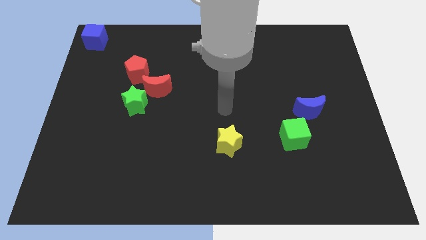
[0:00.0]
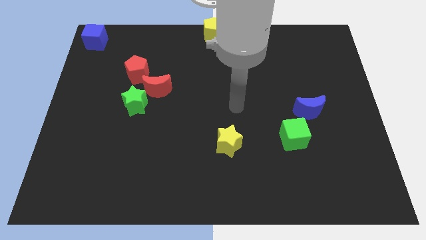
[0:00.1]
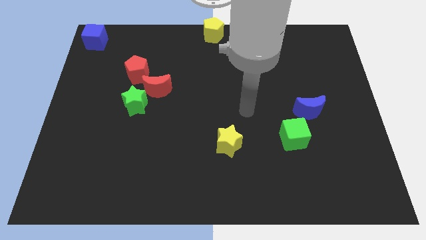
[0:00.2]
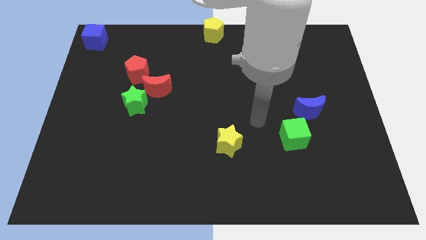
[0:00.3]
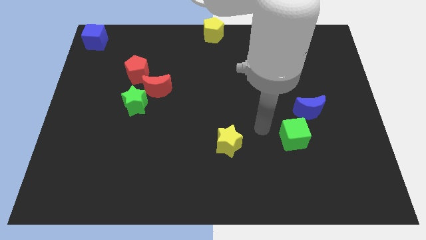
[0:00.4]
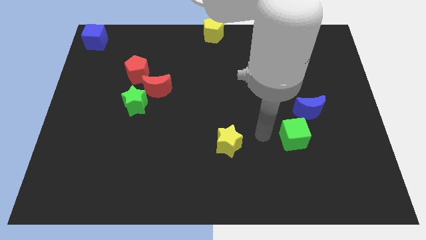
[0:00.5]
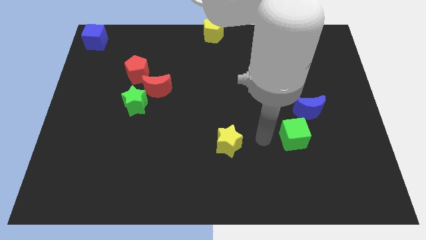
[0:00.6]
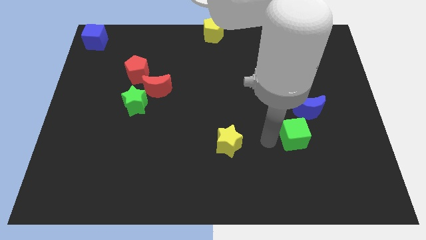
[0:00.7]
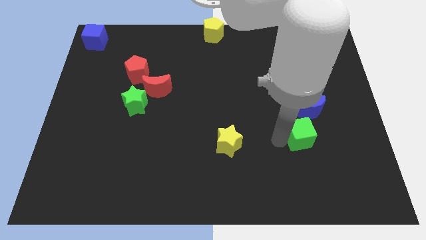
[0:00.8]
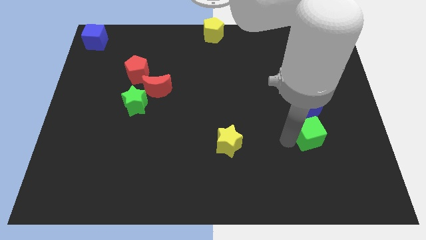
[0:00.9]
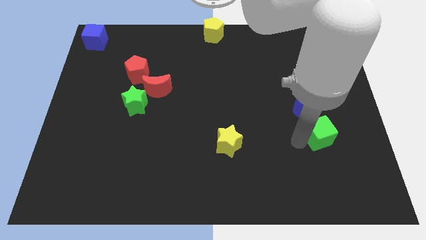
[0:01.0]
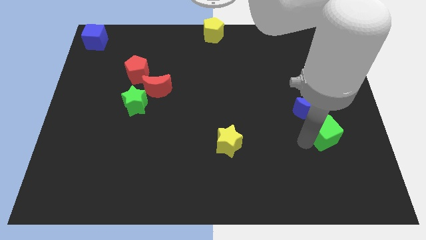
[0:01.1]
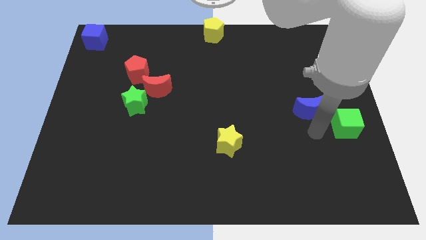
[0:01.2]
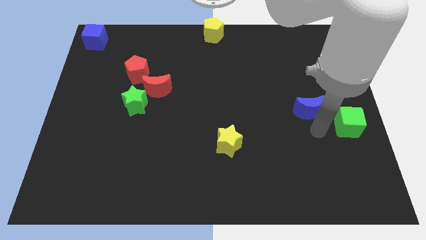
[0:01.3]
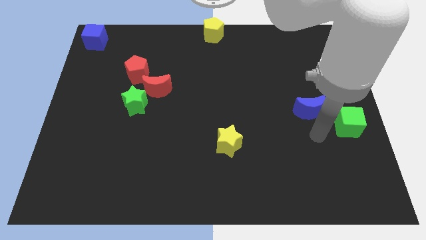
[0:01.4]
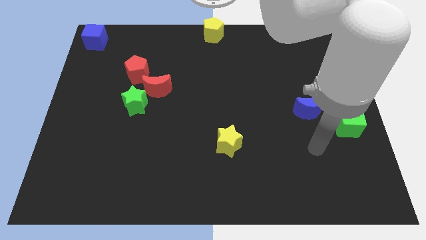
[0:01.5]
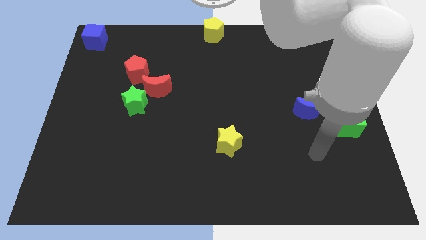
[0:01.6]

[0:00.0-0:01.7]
push the green cube towards the right of the board

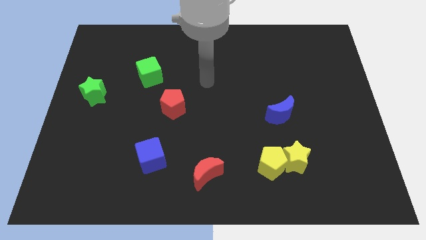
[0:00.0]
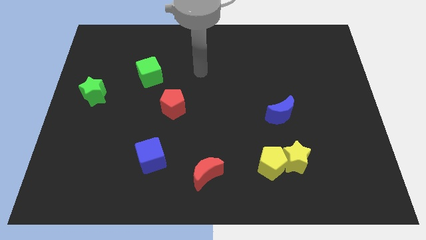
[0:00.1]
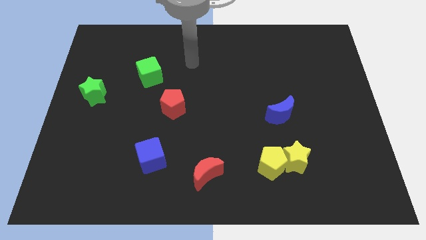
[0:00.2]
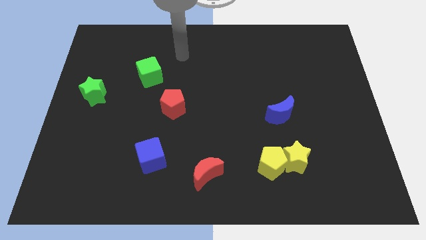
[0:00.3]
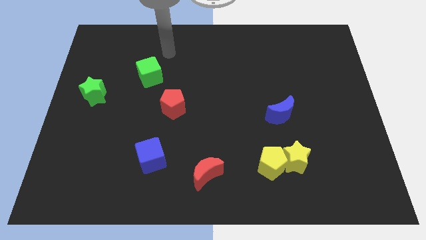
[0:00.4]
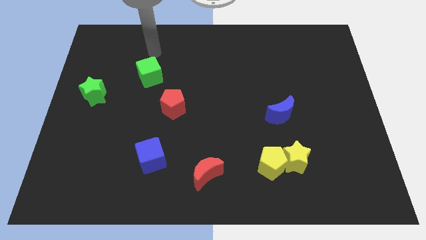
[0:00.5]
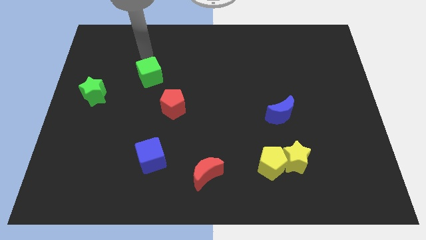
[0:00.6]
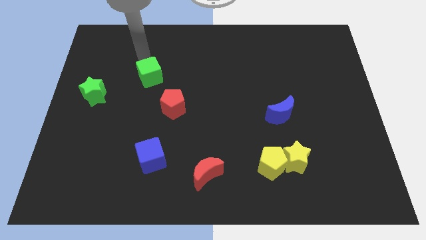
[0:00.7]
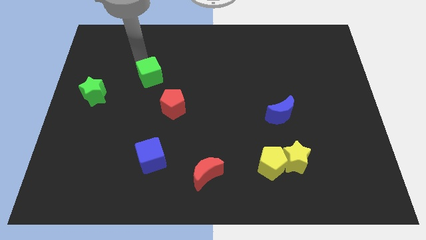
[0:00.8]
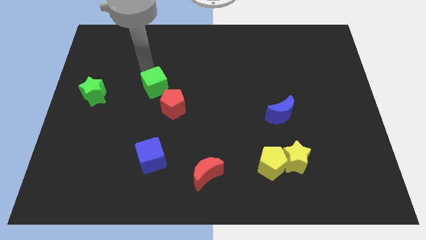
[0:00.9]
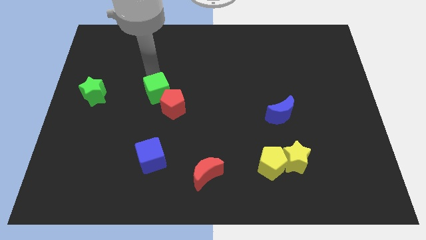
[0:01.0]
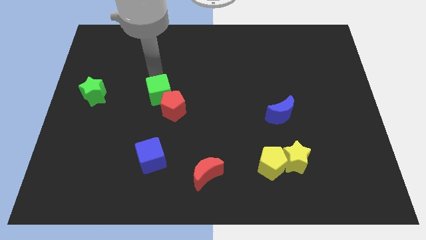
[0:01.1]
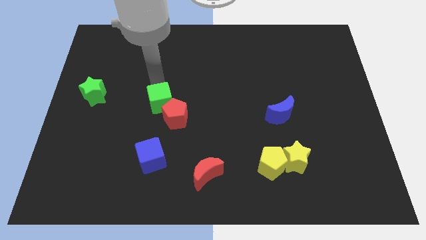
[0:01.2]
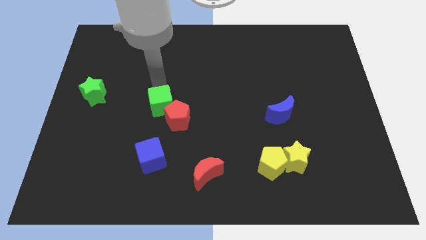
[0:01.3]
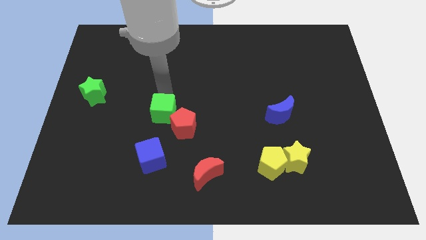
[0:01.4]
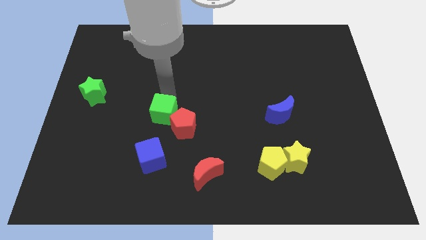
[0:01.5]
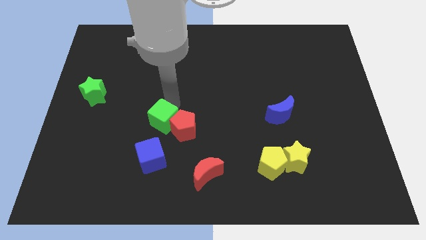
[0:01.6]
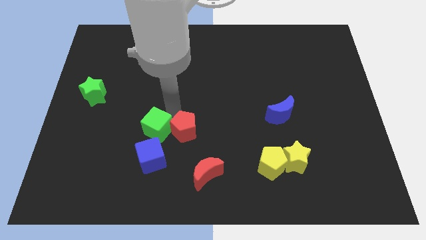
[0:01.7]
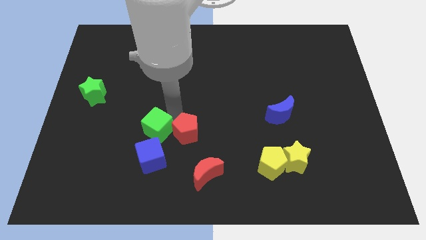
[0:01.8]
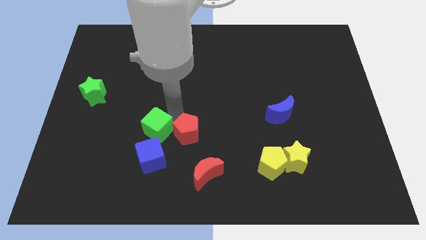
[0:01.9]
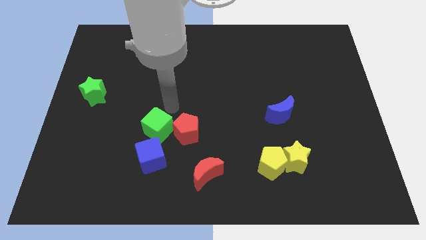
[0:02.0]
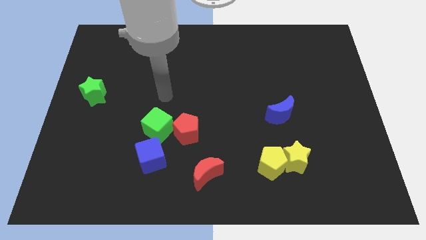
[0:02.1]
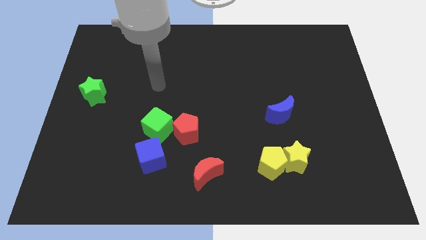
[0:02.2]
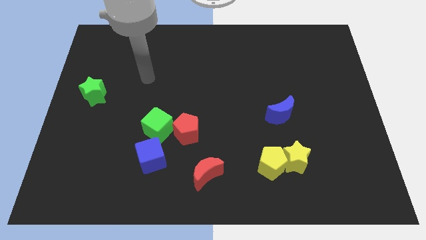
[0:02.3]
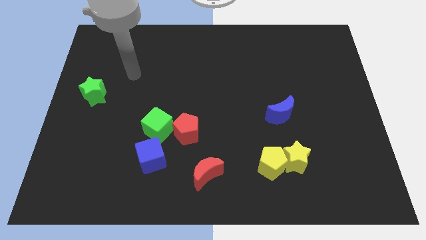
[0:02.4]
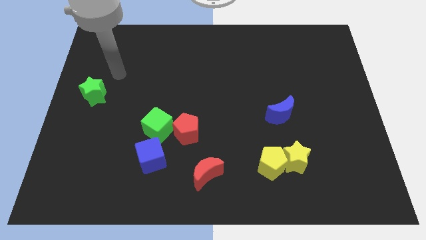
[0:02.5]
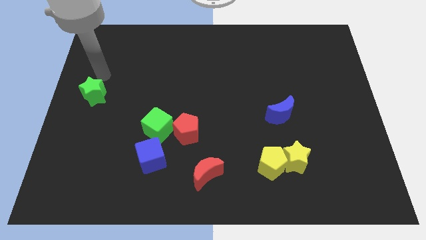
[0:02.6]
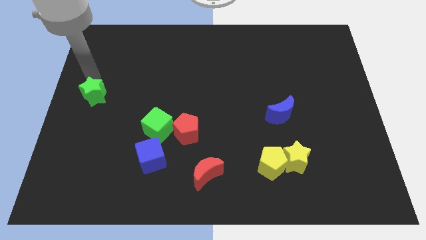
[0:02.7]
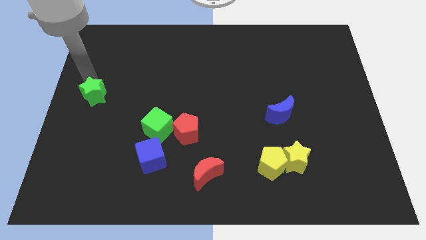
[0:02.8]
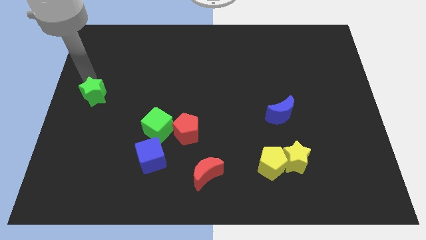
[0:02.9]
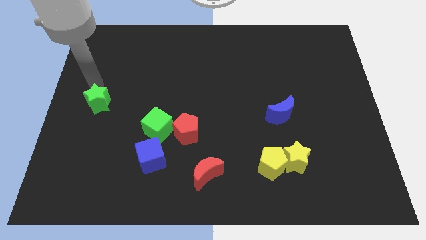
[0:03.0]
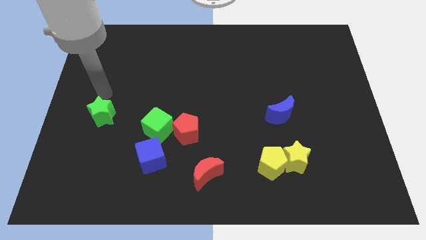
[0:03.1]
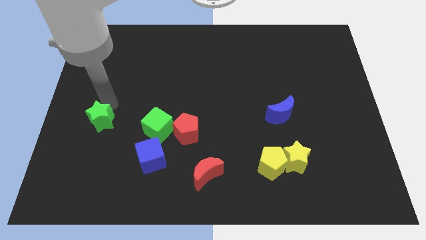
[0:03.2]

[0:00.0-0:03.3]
push the green cube to the top of the blue cube along with the red pentagon

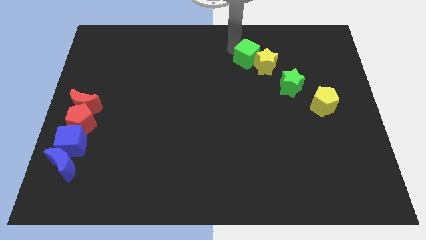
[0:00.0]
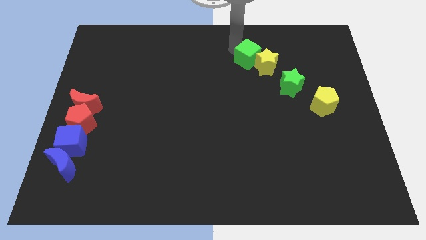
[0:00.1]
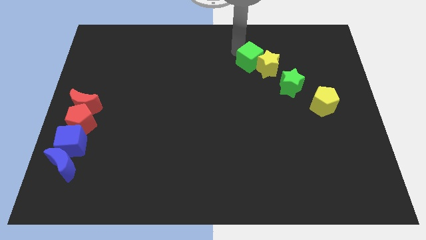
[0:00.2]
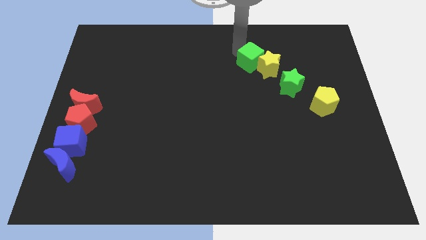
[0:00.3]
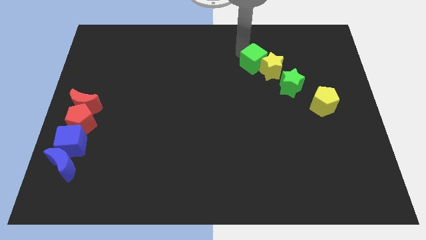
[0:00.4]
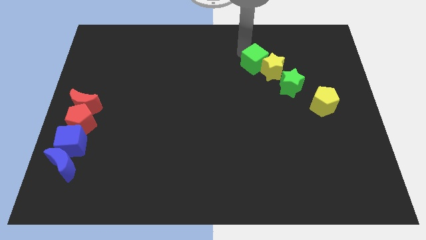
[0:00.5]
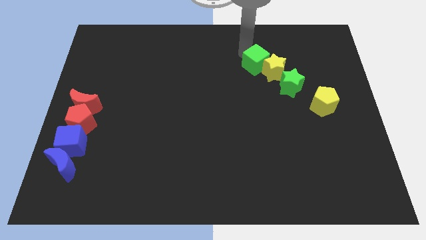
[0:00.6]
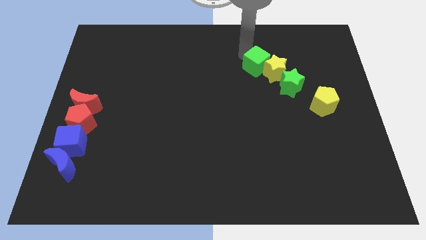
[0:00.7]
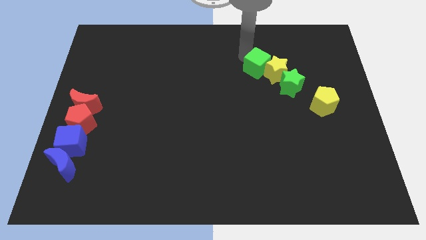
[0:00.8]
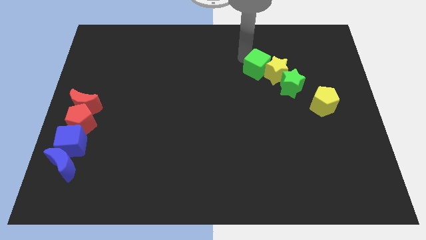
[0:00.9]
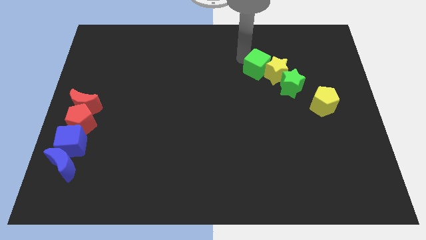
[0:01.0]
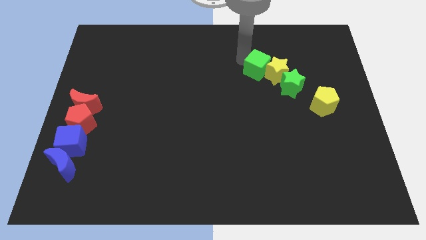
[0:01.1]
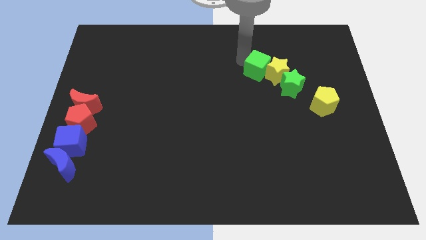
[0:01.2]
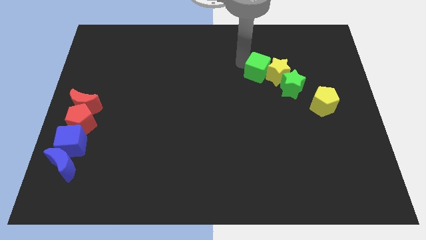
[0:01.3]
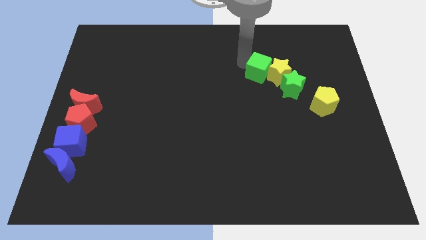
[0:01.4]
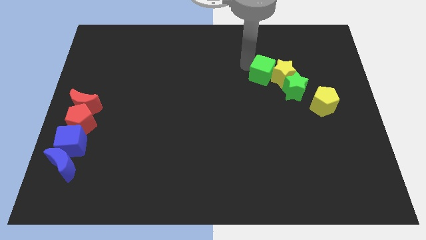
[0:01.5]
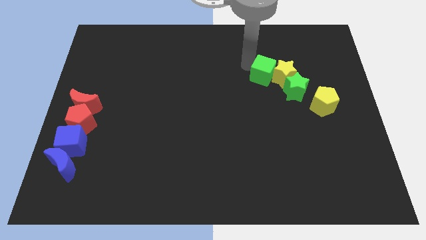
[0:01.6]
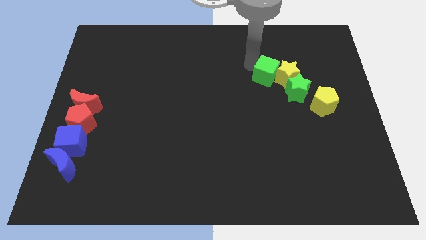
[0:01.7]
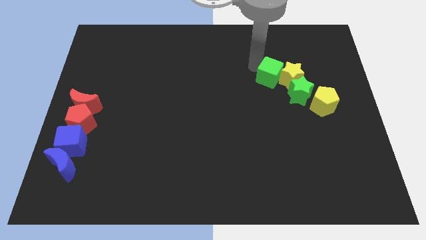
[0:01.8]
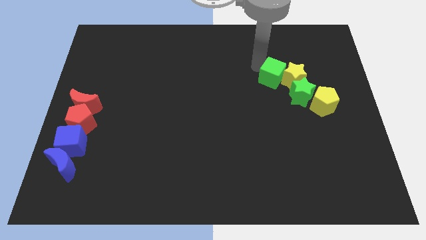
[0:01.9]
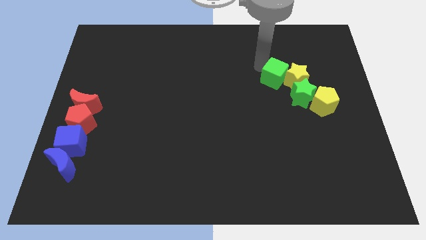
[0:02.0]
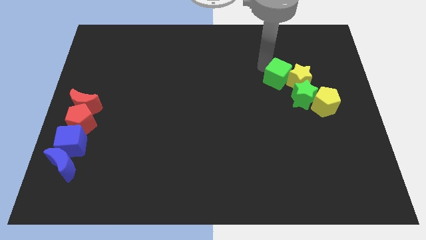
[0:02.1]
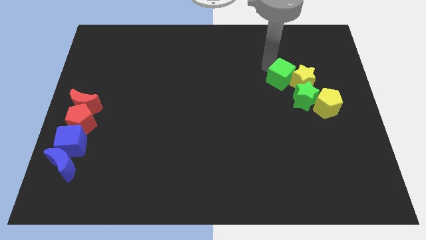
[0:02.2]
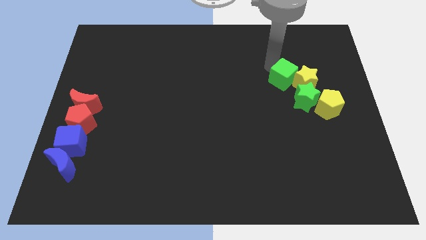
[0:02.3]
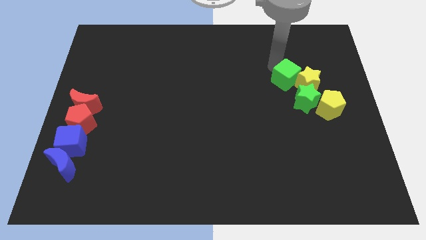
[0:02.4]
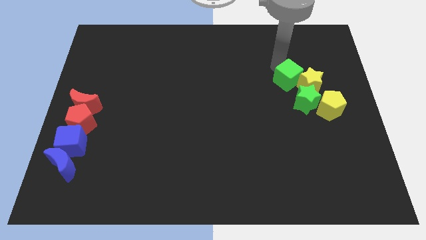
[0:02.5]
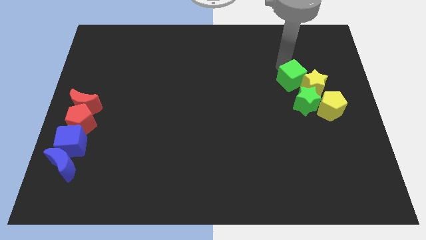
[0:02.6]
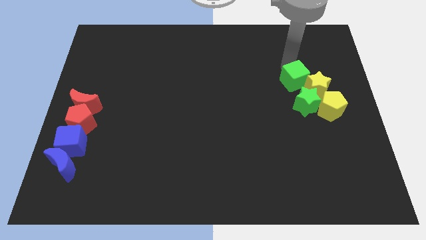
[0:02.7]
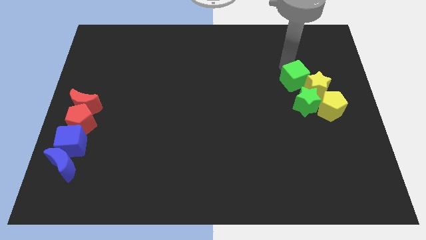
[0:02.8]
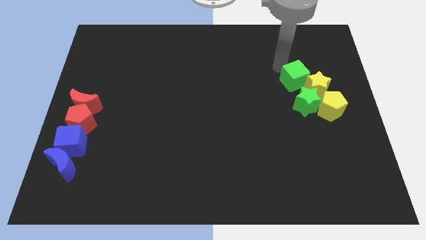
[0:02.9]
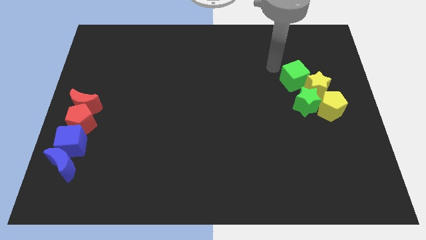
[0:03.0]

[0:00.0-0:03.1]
group up the green cube yellow star yellow pentagon and green star at the right side of the board

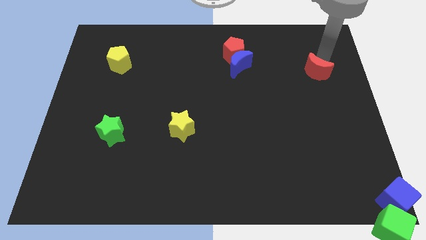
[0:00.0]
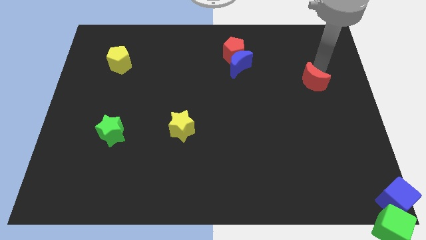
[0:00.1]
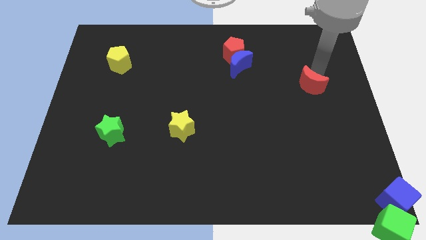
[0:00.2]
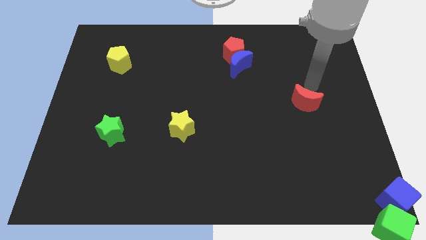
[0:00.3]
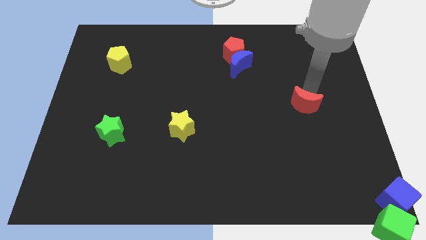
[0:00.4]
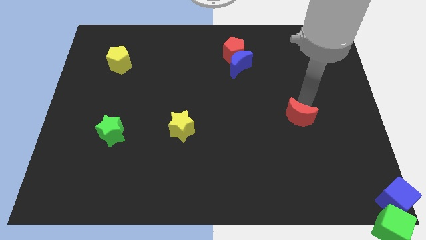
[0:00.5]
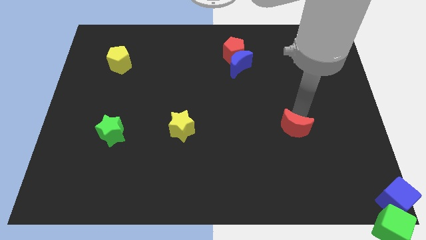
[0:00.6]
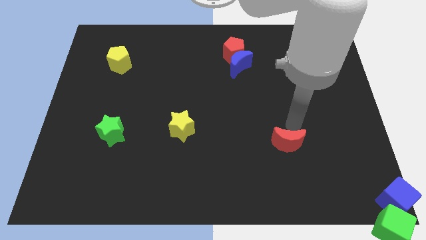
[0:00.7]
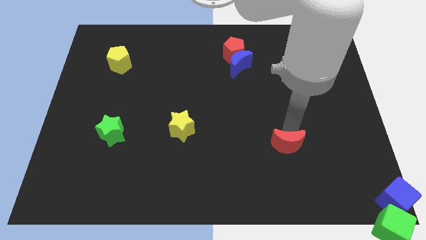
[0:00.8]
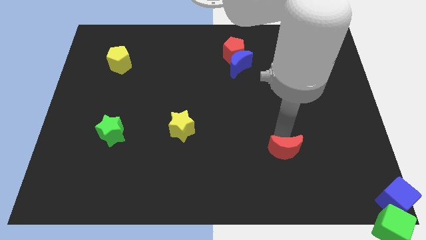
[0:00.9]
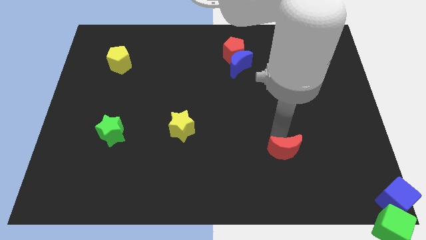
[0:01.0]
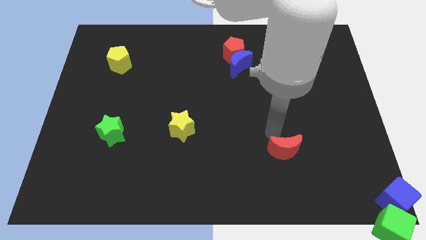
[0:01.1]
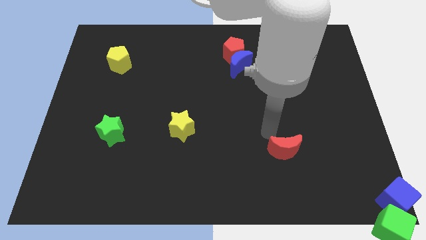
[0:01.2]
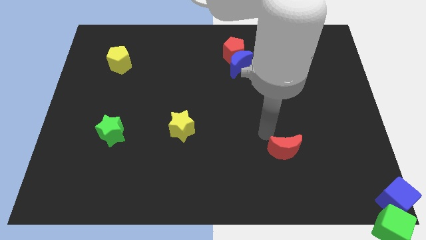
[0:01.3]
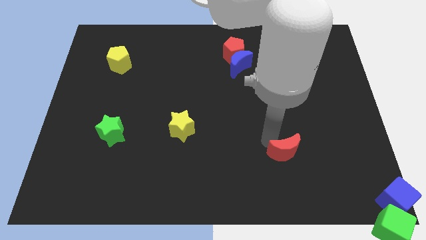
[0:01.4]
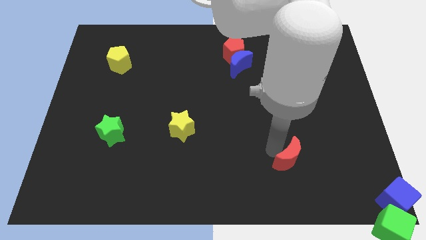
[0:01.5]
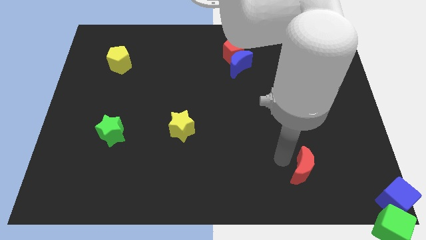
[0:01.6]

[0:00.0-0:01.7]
push the red moon downward
